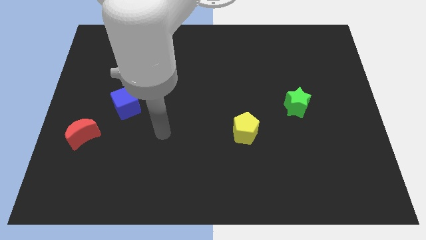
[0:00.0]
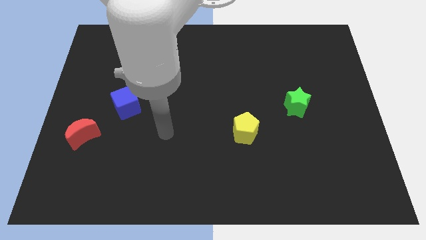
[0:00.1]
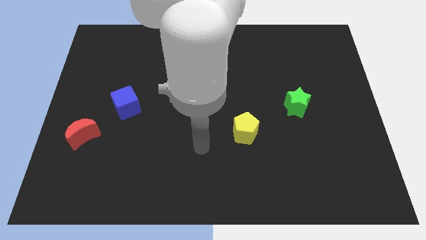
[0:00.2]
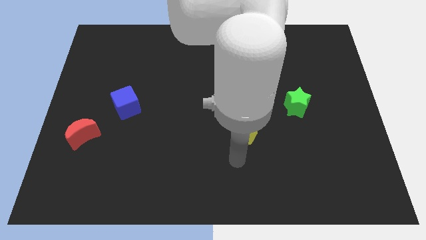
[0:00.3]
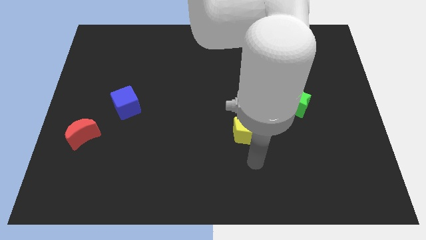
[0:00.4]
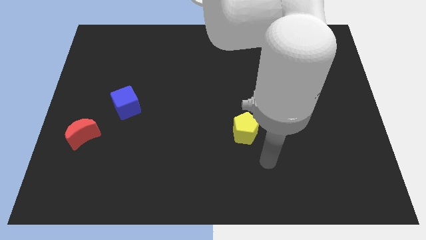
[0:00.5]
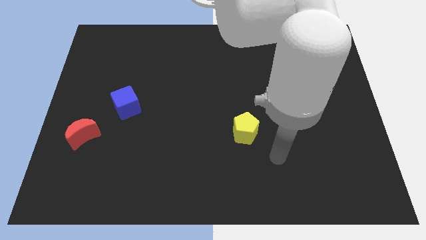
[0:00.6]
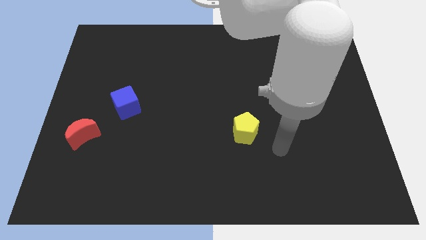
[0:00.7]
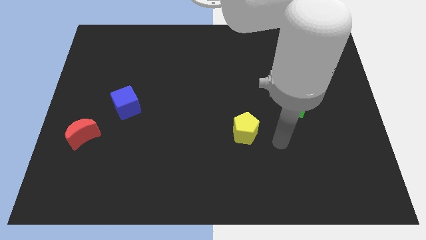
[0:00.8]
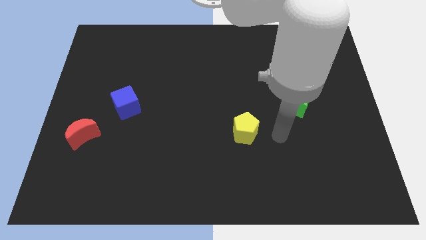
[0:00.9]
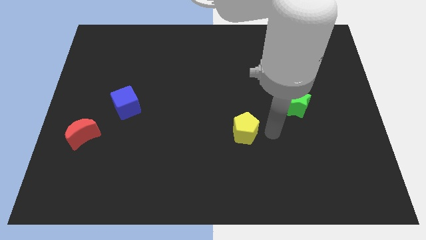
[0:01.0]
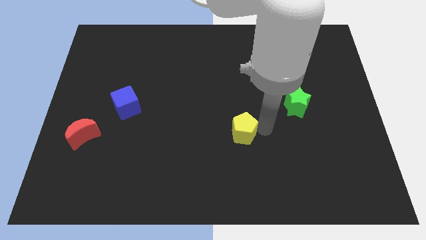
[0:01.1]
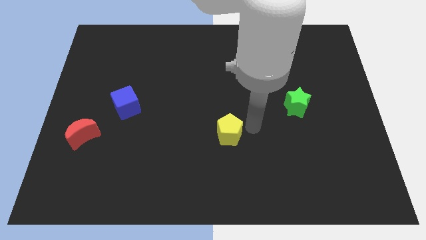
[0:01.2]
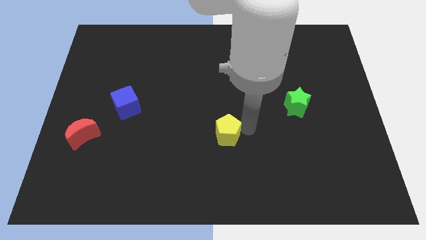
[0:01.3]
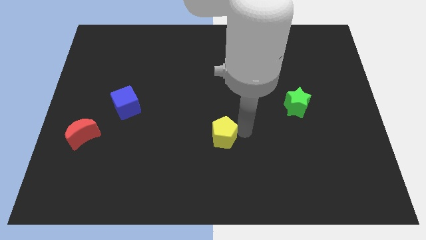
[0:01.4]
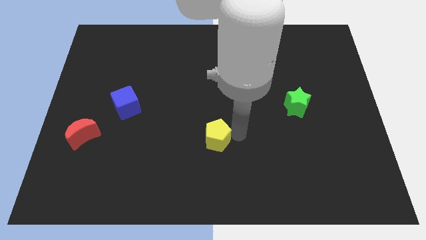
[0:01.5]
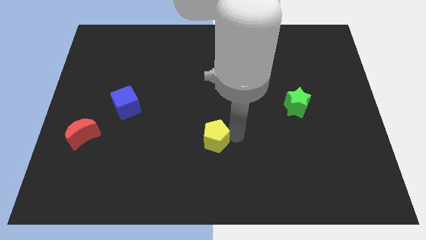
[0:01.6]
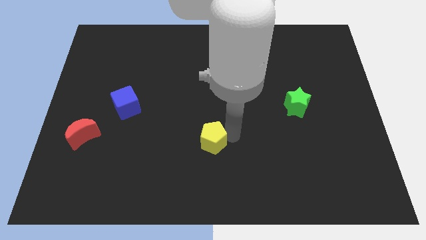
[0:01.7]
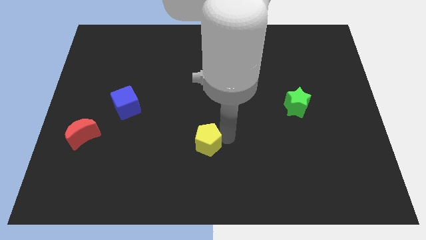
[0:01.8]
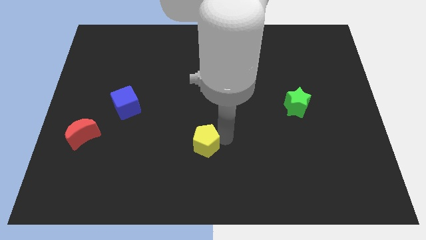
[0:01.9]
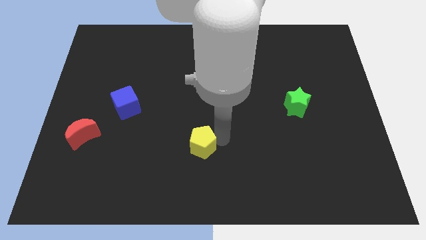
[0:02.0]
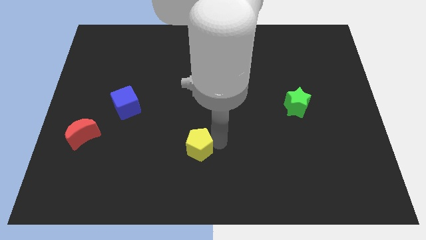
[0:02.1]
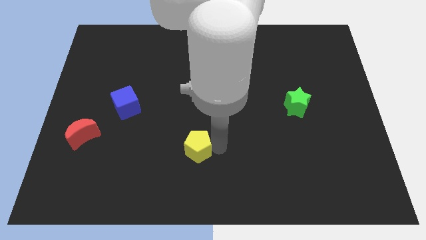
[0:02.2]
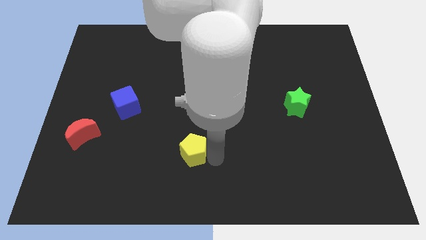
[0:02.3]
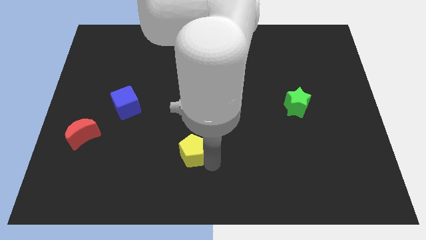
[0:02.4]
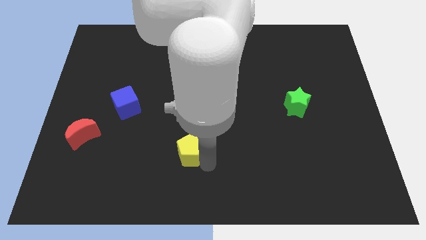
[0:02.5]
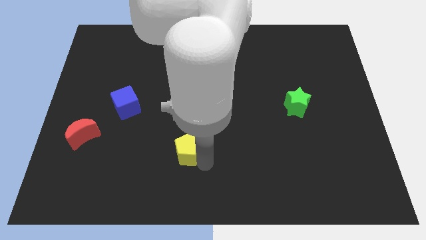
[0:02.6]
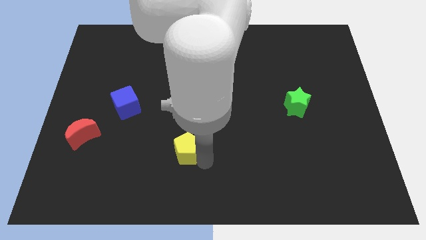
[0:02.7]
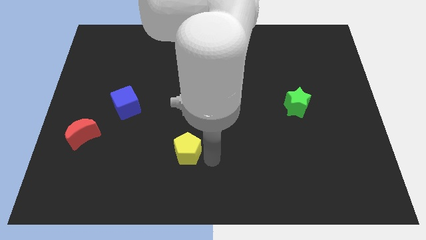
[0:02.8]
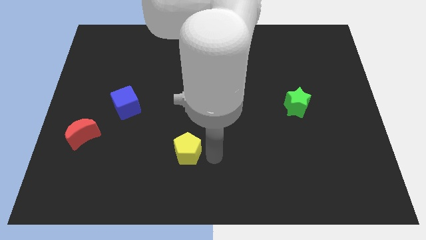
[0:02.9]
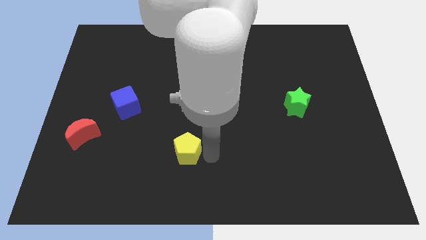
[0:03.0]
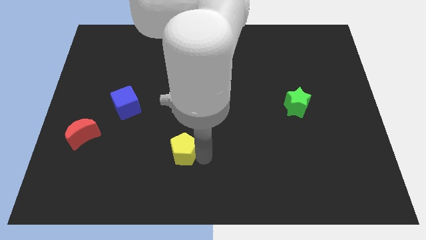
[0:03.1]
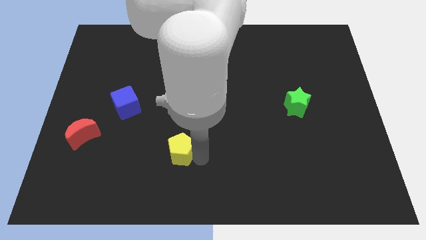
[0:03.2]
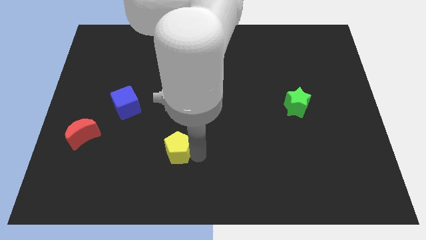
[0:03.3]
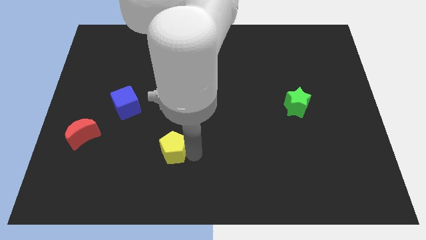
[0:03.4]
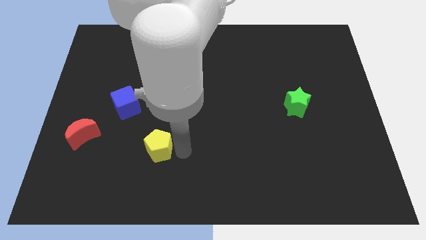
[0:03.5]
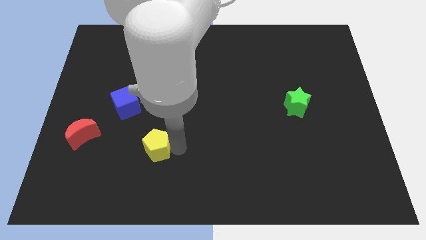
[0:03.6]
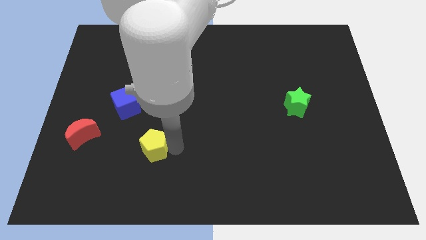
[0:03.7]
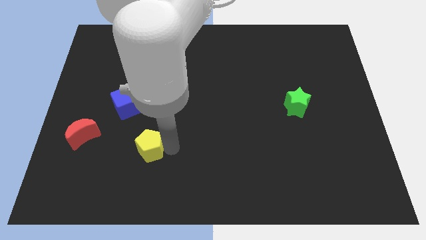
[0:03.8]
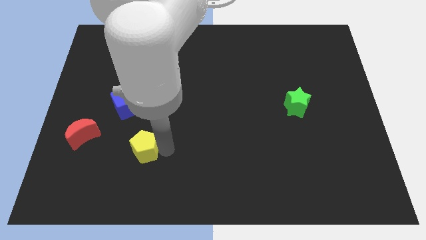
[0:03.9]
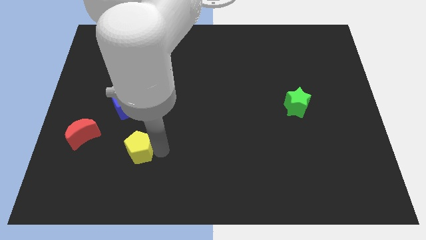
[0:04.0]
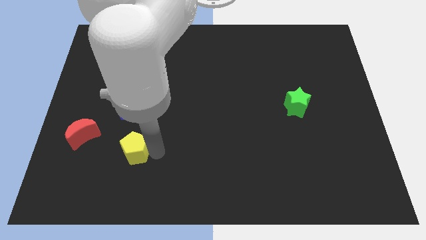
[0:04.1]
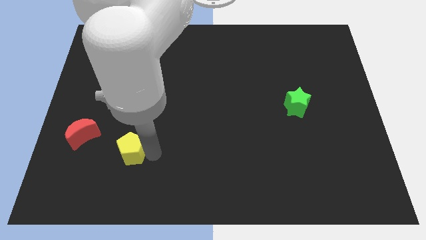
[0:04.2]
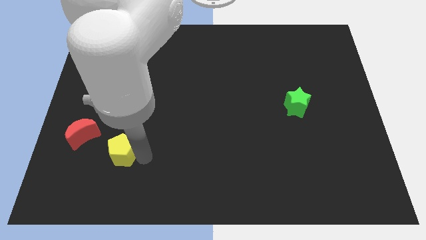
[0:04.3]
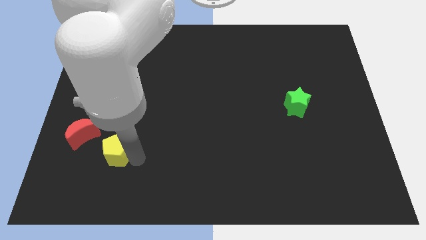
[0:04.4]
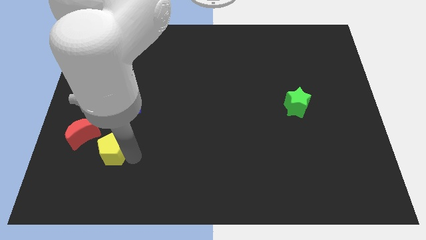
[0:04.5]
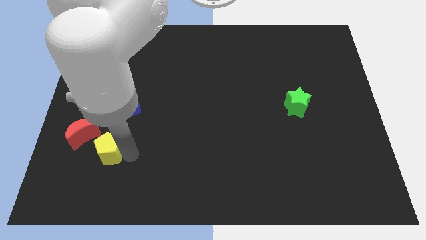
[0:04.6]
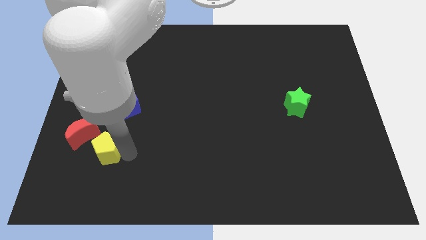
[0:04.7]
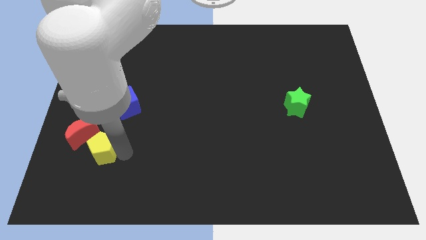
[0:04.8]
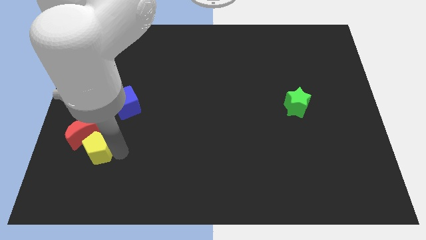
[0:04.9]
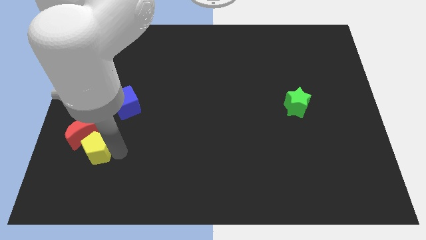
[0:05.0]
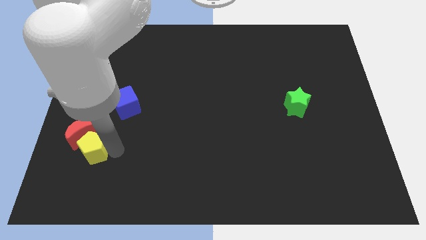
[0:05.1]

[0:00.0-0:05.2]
slide the pentagon next to the moon

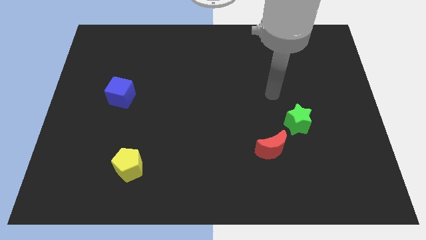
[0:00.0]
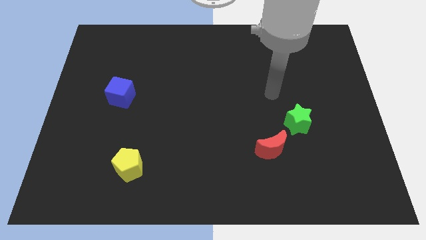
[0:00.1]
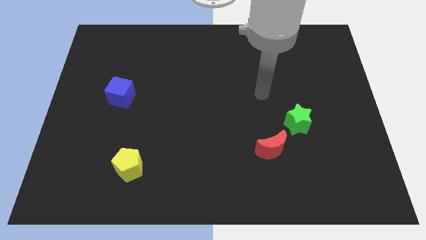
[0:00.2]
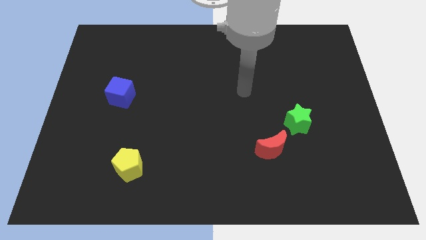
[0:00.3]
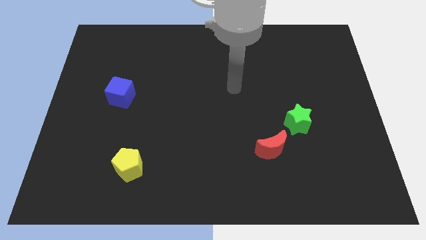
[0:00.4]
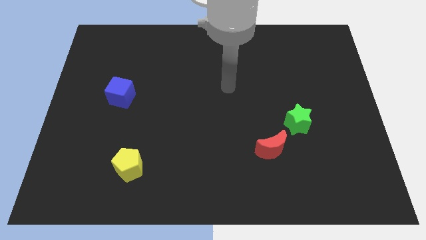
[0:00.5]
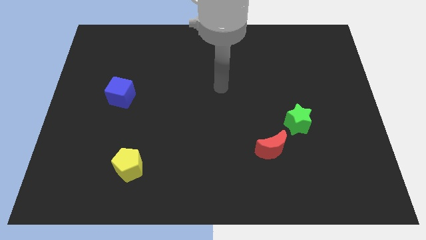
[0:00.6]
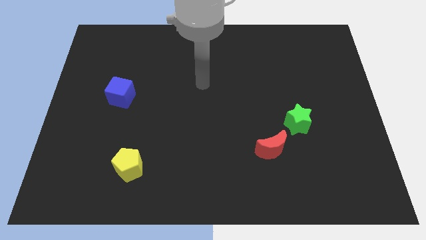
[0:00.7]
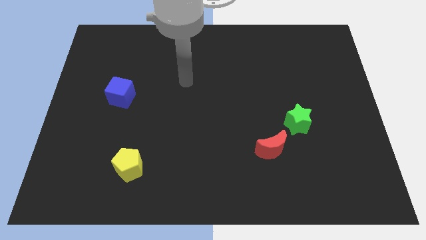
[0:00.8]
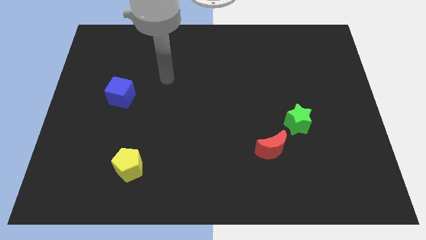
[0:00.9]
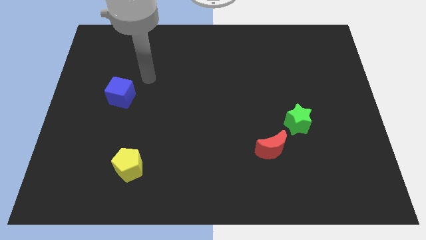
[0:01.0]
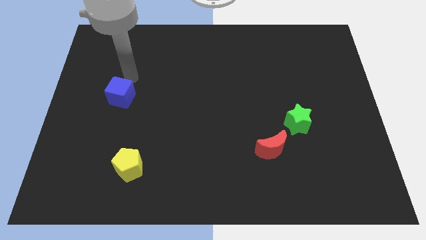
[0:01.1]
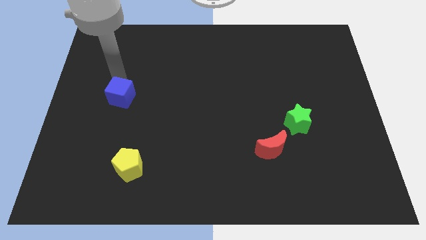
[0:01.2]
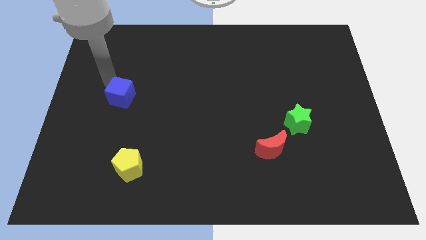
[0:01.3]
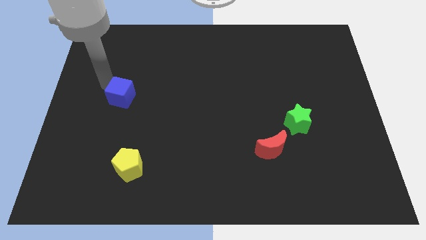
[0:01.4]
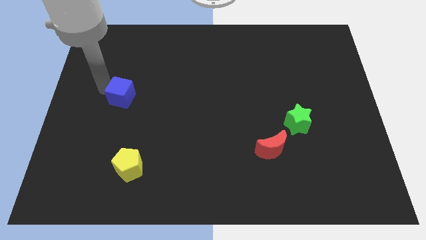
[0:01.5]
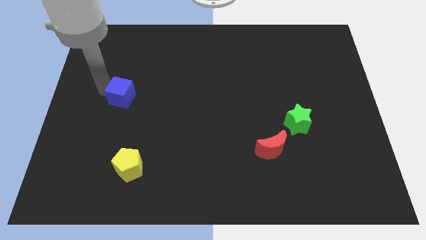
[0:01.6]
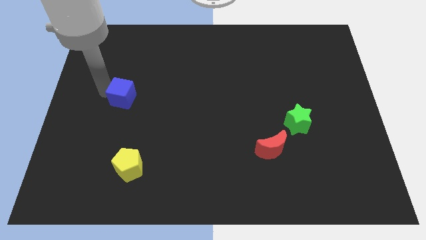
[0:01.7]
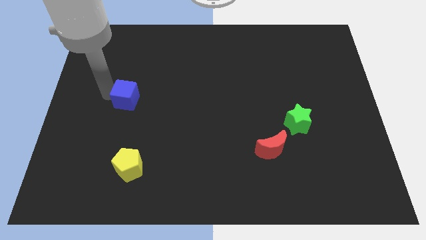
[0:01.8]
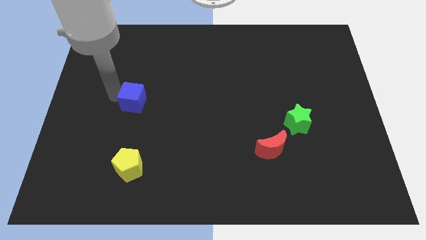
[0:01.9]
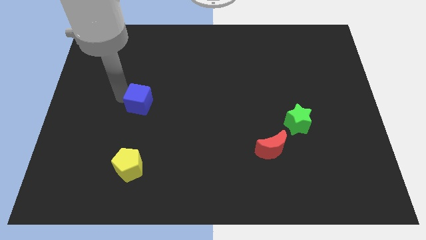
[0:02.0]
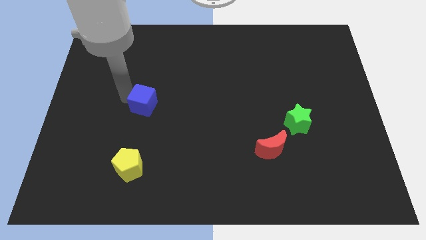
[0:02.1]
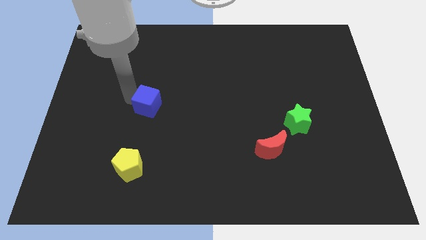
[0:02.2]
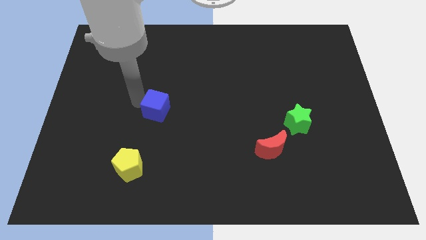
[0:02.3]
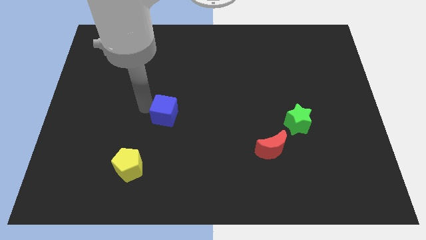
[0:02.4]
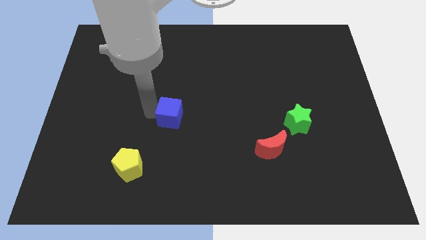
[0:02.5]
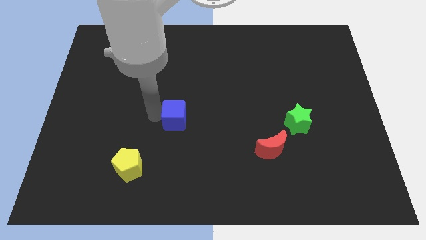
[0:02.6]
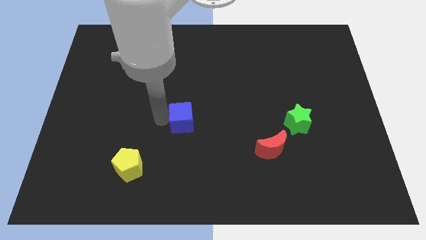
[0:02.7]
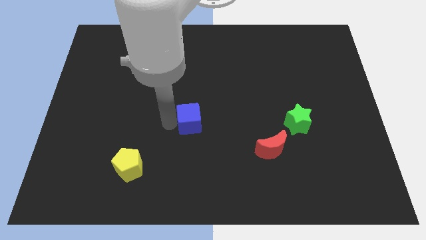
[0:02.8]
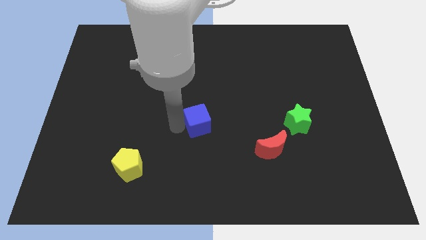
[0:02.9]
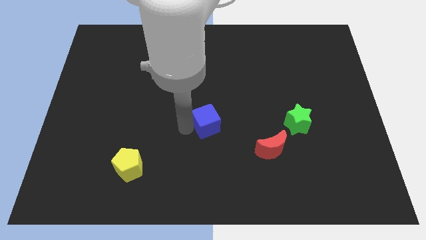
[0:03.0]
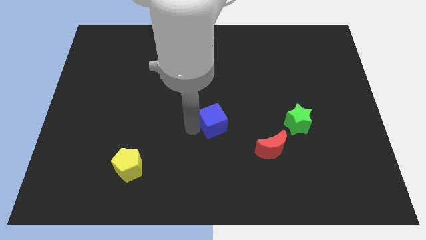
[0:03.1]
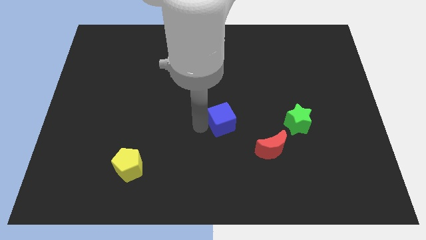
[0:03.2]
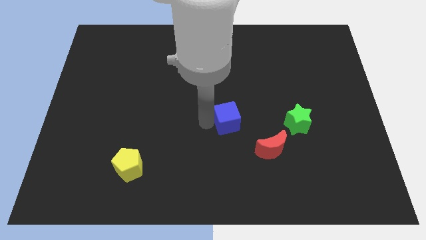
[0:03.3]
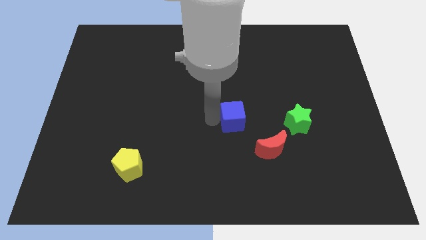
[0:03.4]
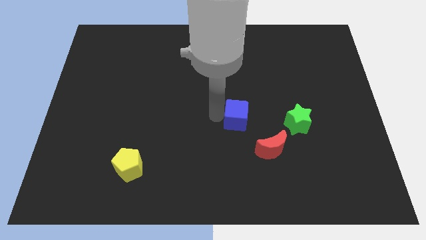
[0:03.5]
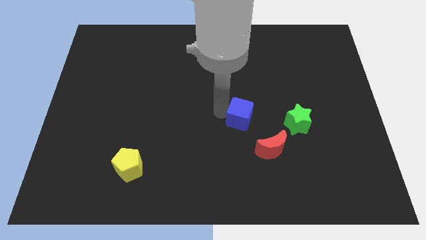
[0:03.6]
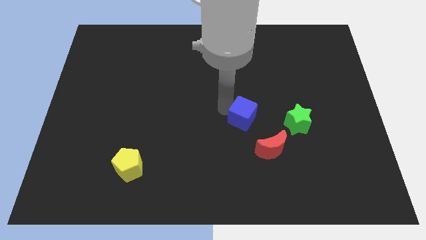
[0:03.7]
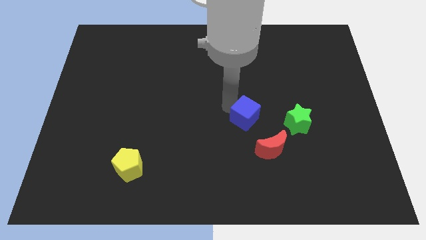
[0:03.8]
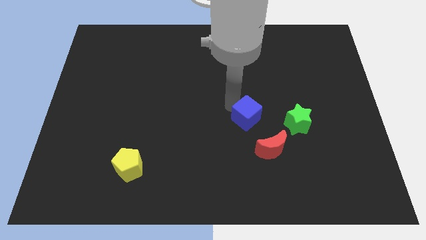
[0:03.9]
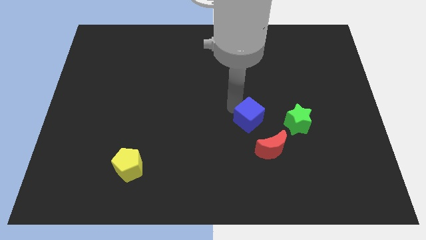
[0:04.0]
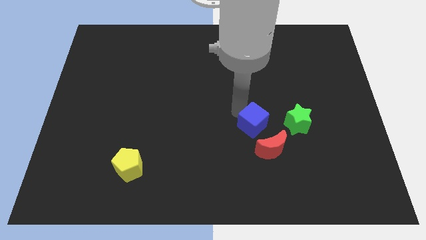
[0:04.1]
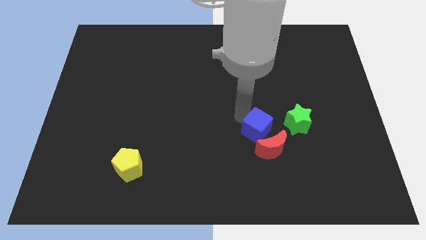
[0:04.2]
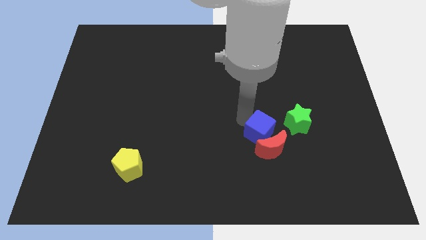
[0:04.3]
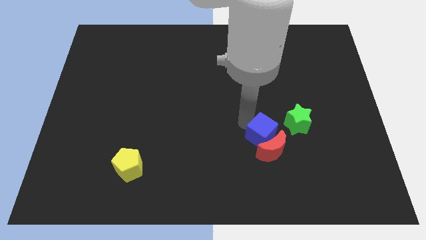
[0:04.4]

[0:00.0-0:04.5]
move the cube towards the red block
